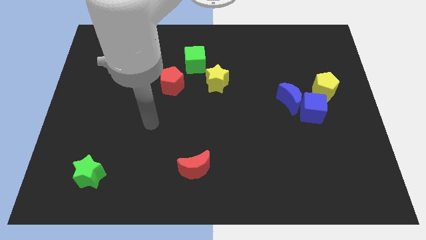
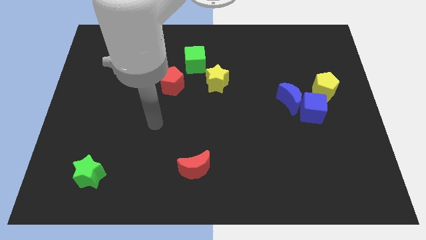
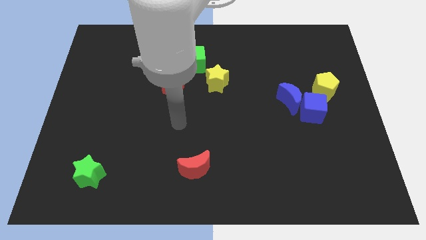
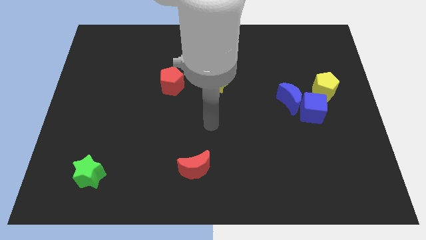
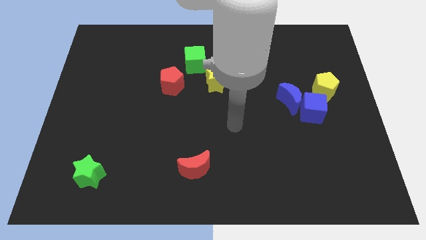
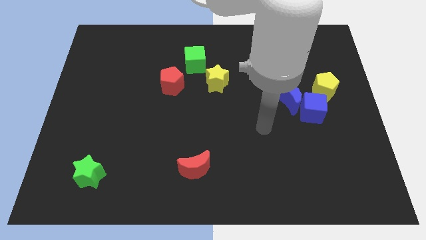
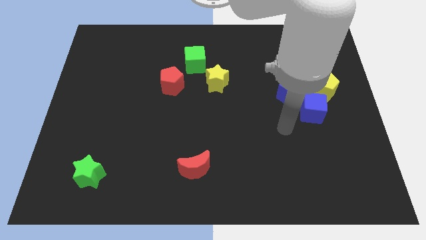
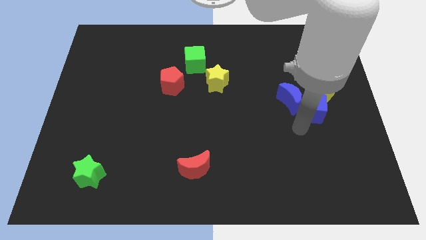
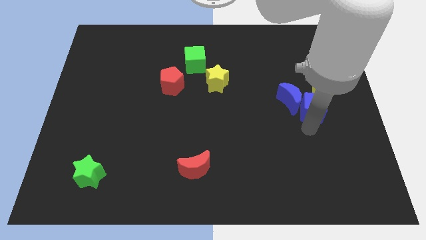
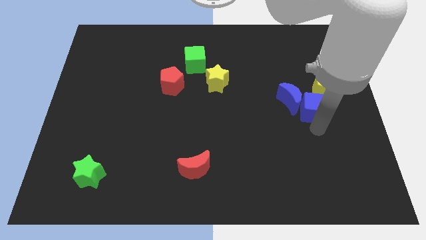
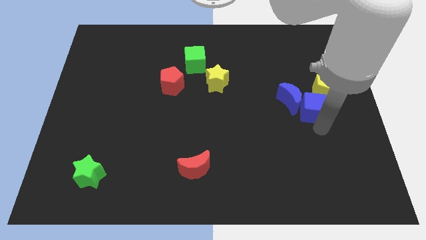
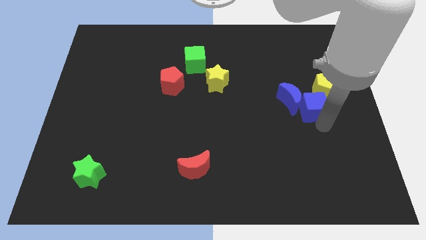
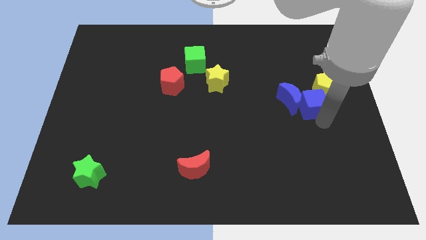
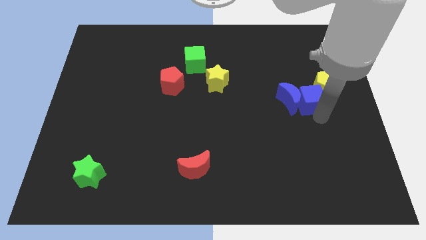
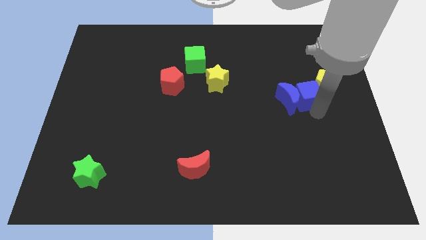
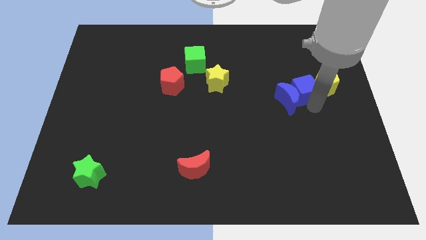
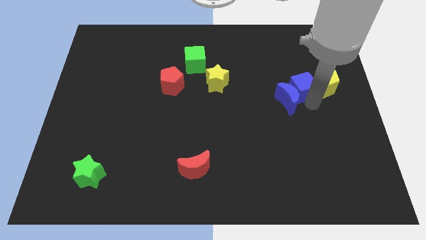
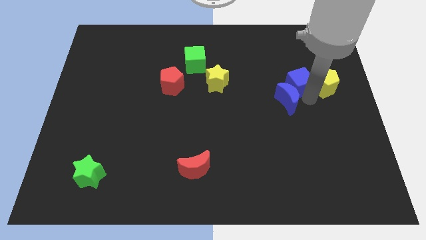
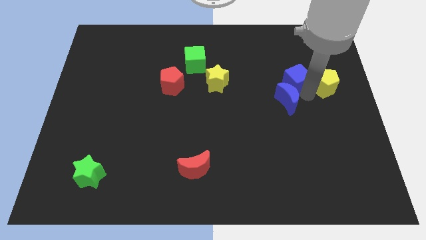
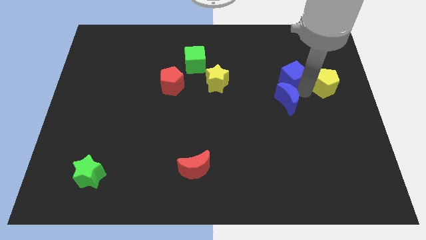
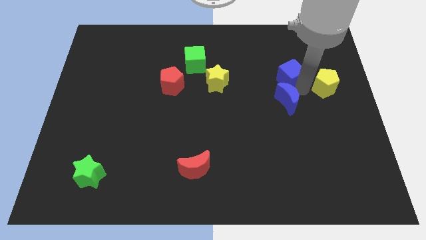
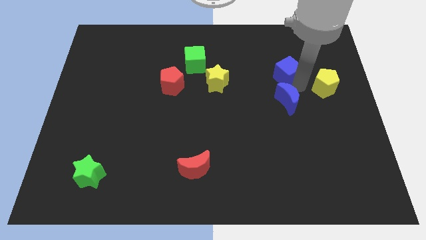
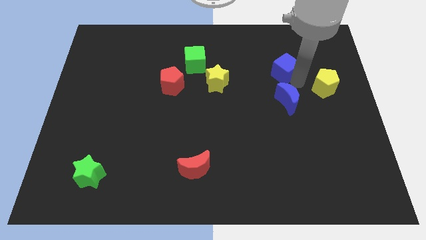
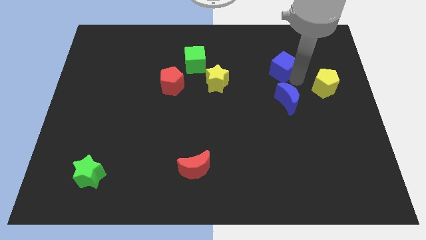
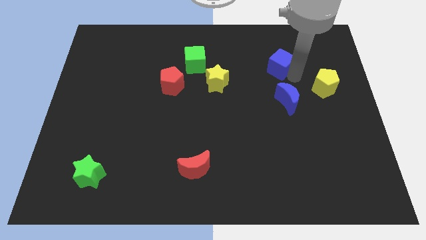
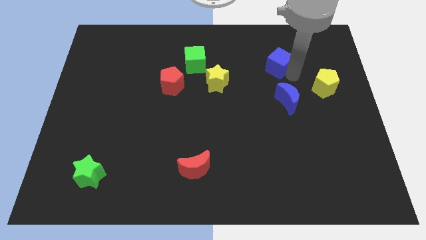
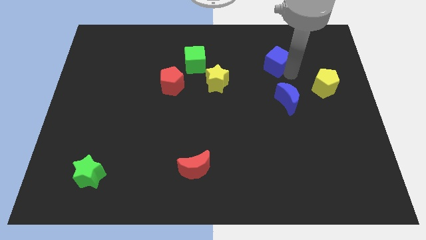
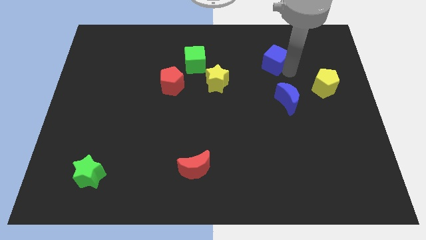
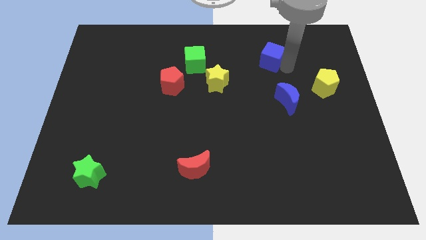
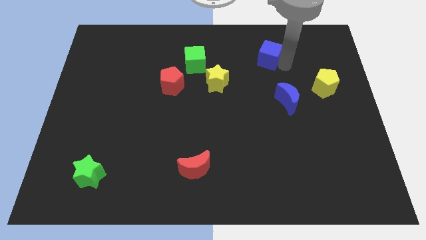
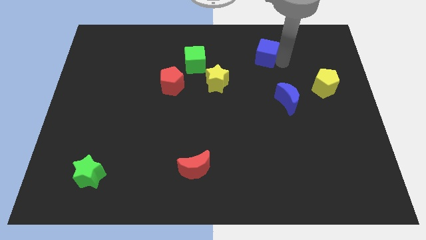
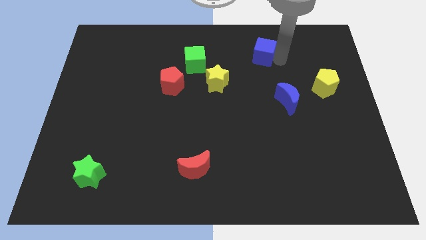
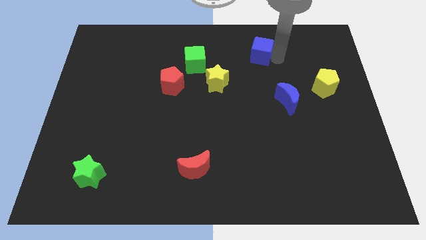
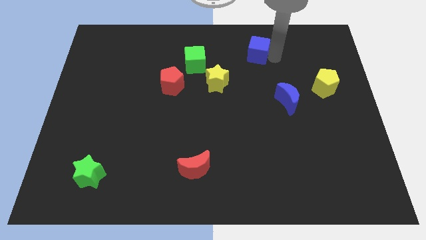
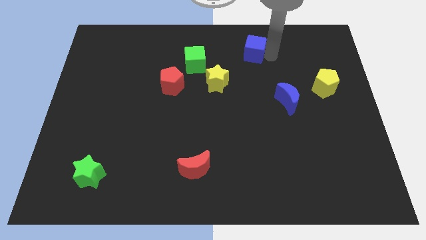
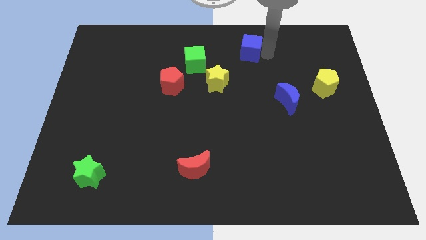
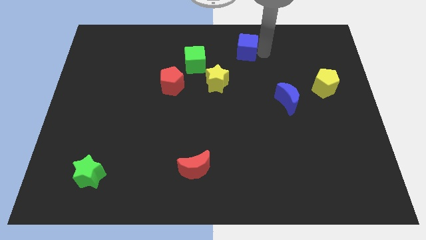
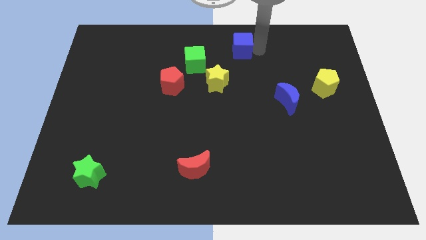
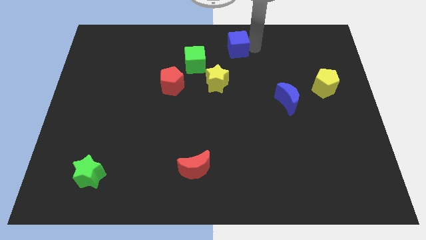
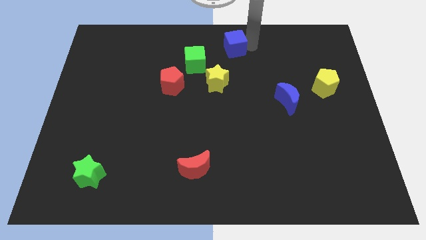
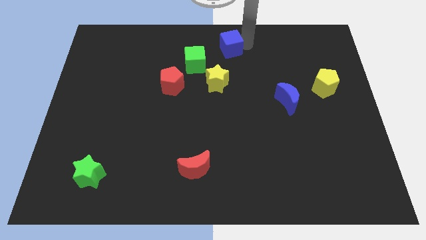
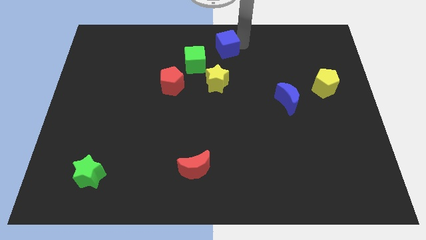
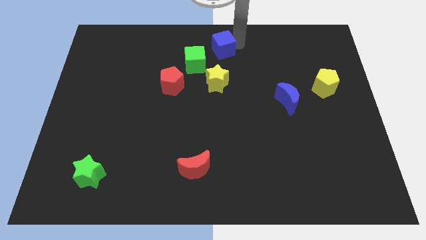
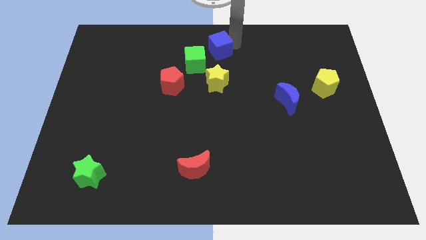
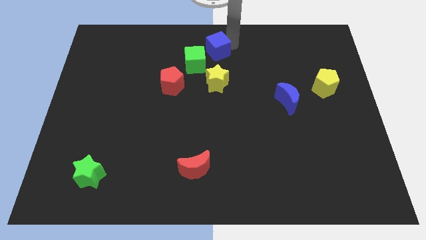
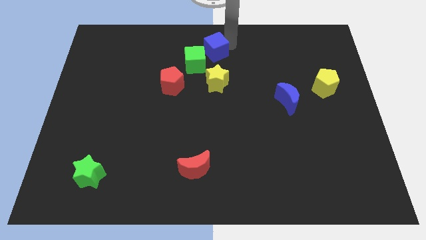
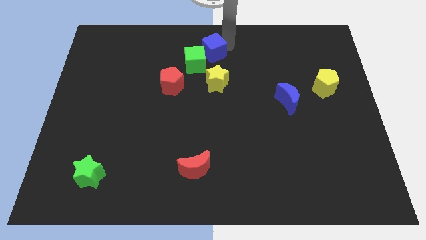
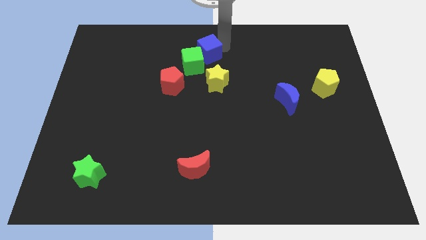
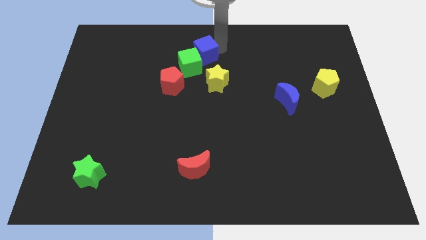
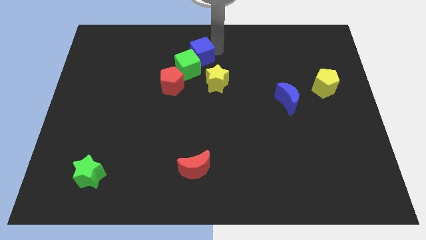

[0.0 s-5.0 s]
put the blue cube towards the green cube

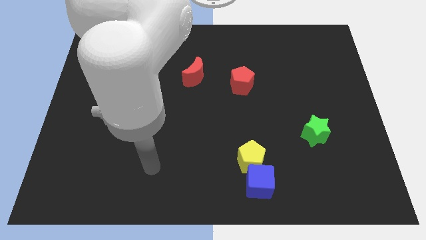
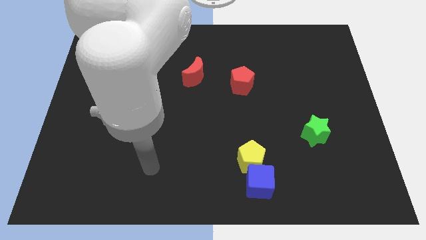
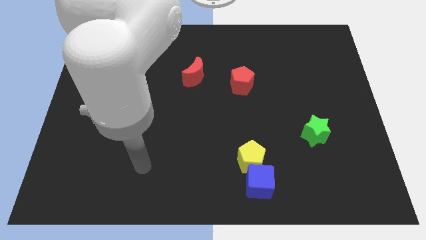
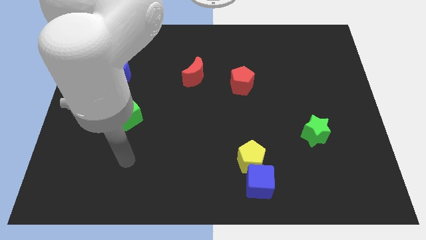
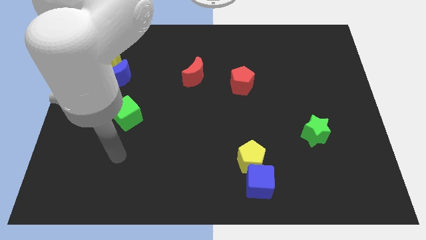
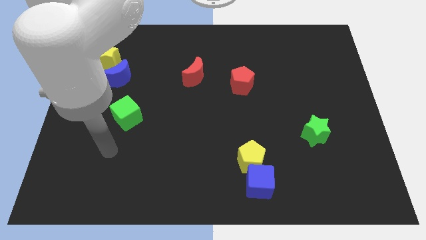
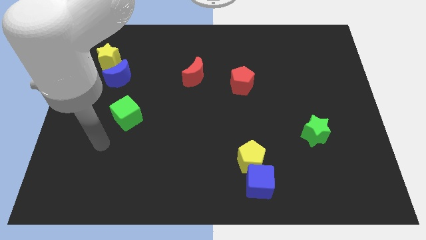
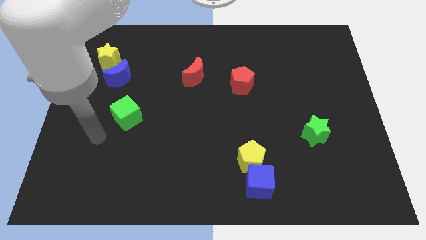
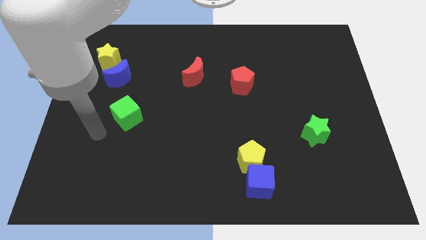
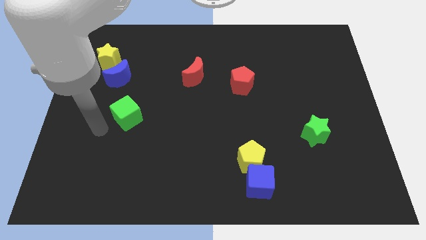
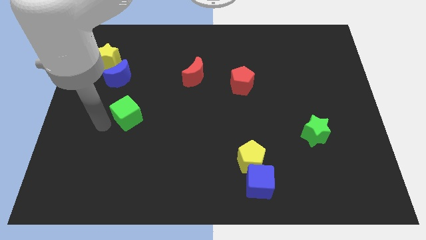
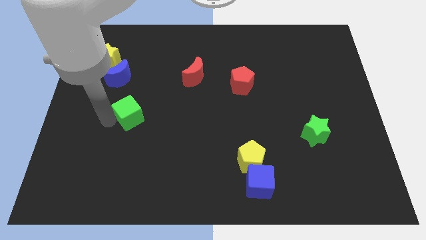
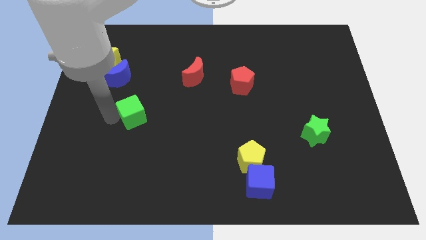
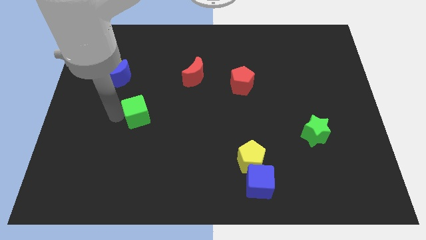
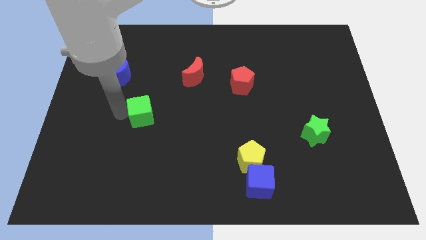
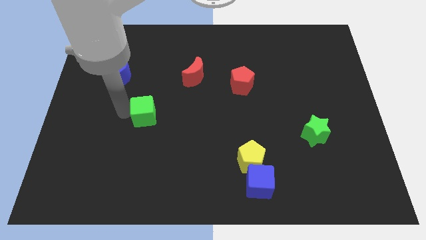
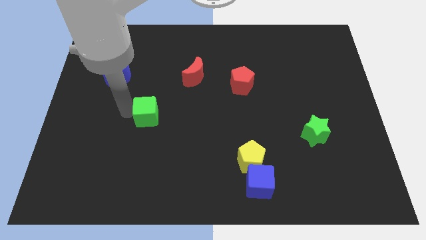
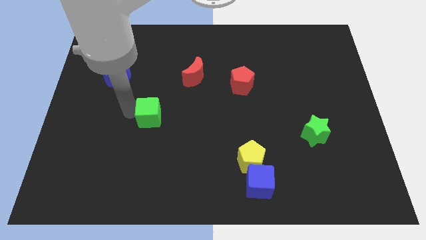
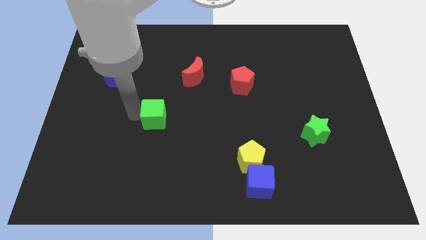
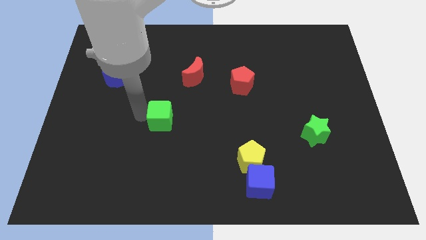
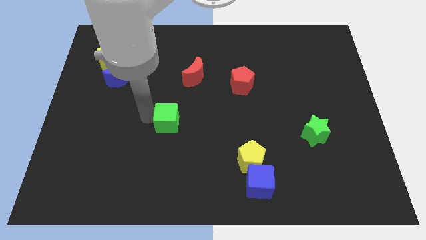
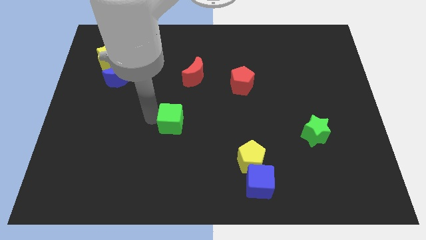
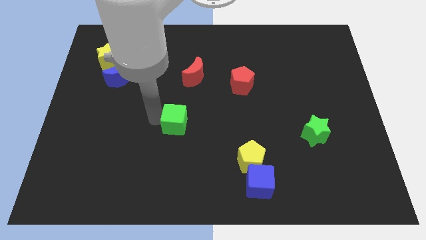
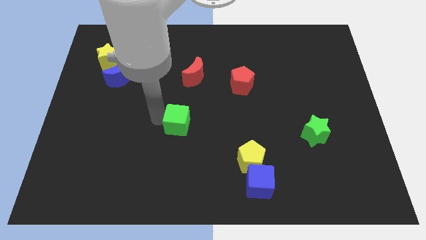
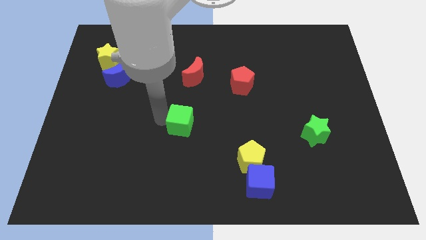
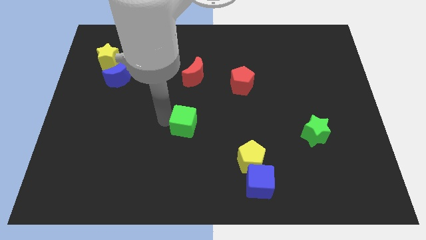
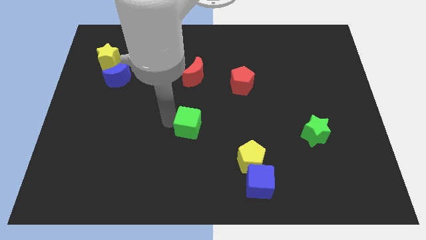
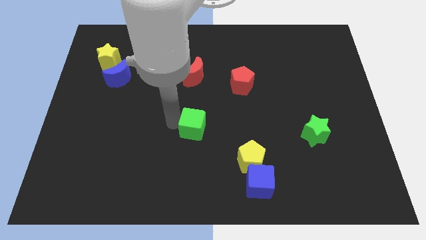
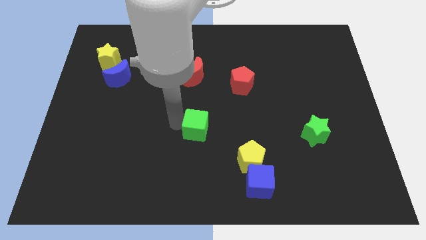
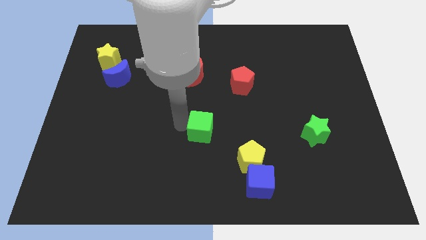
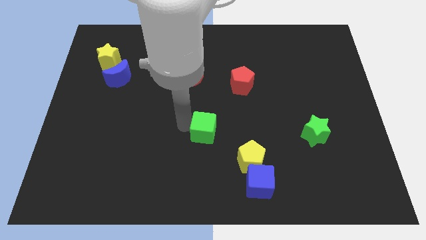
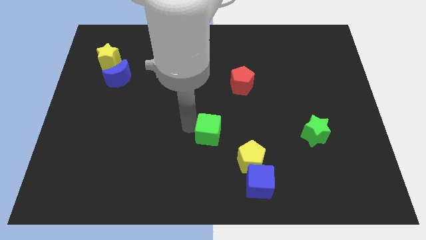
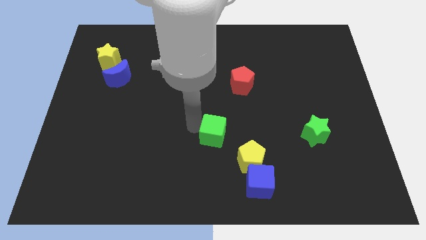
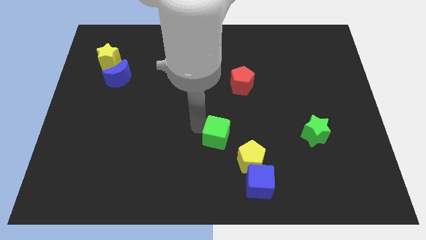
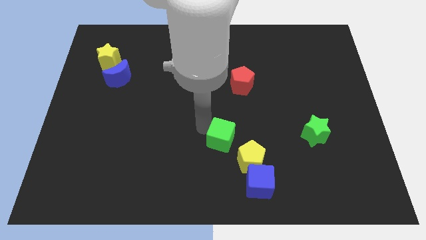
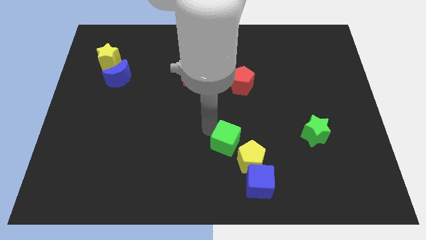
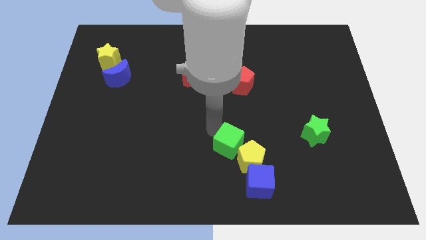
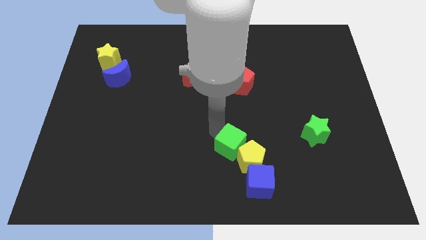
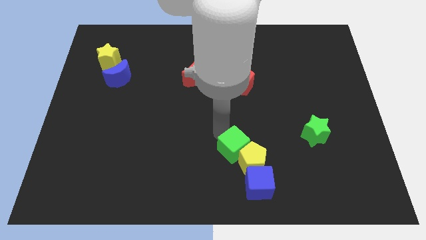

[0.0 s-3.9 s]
put the green cube towards the yellow pentagon
